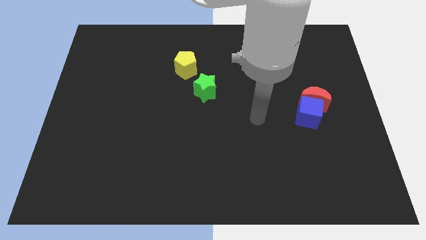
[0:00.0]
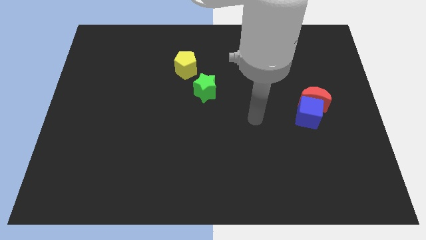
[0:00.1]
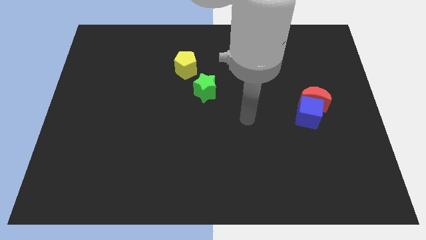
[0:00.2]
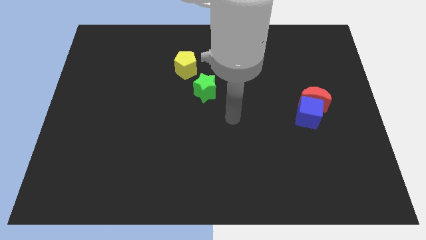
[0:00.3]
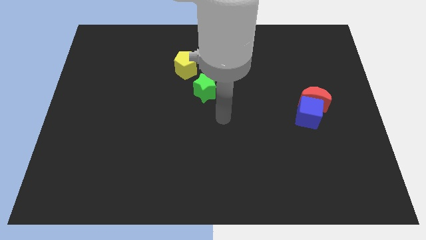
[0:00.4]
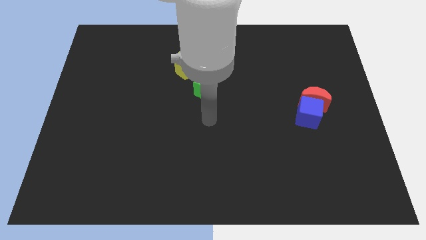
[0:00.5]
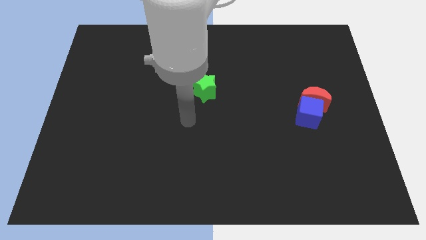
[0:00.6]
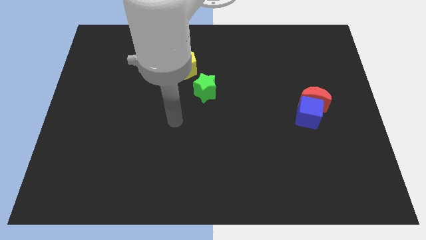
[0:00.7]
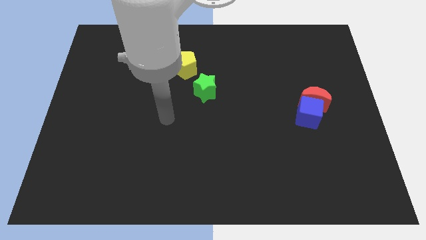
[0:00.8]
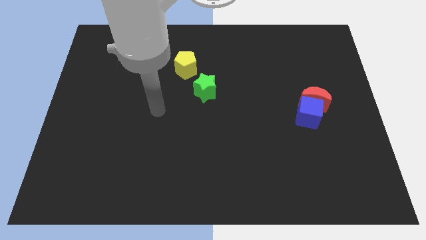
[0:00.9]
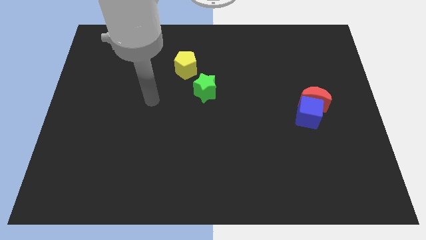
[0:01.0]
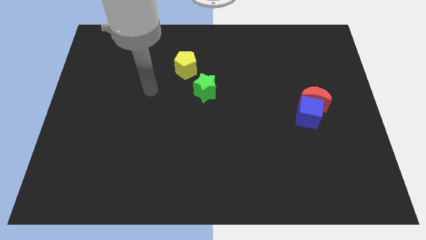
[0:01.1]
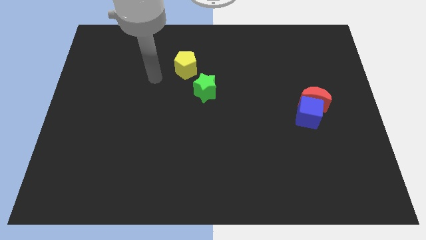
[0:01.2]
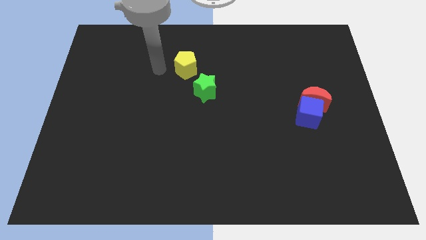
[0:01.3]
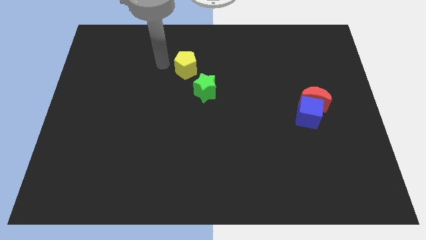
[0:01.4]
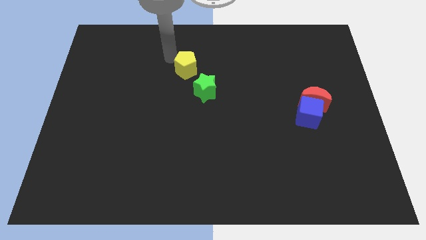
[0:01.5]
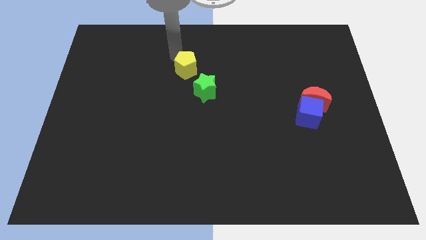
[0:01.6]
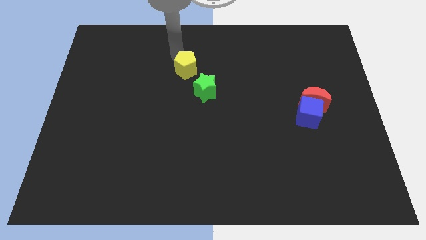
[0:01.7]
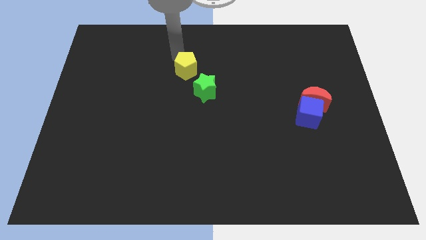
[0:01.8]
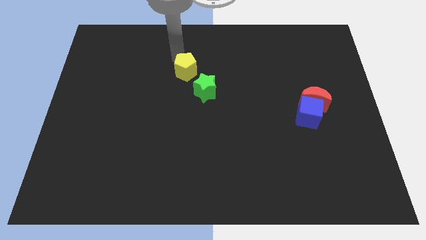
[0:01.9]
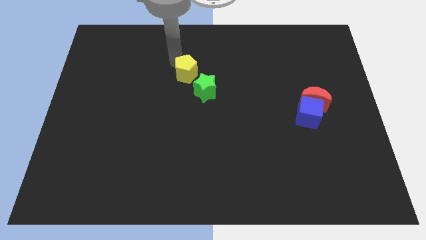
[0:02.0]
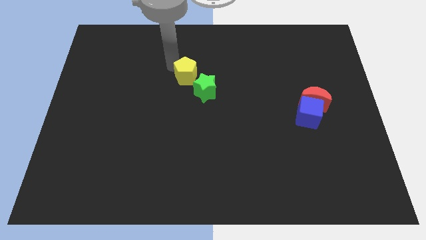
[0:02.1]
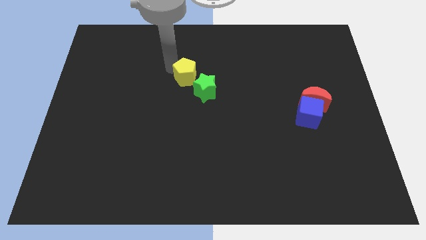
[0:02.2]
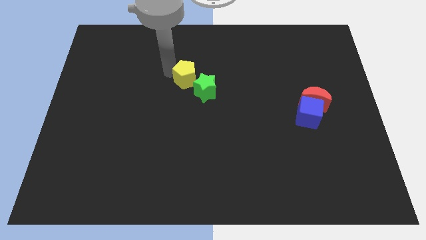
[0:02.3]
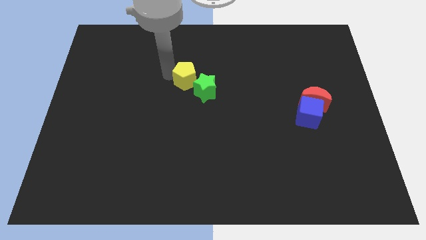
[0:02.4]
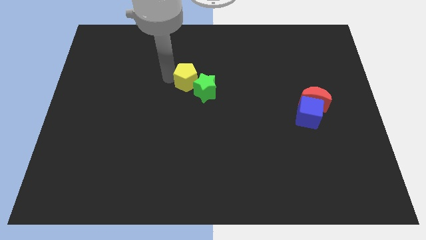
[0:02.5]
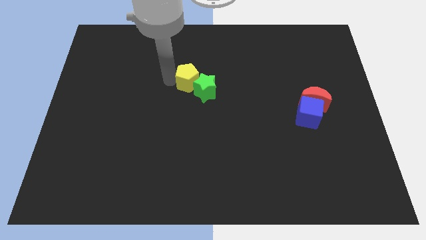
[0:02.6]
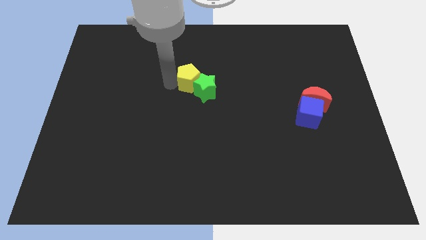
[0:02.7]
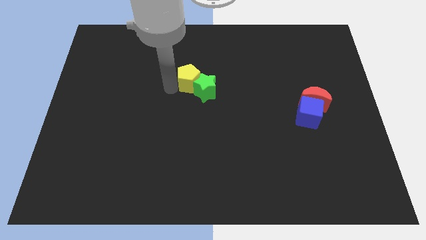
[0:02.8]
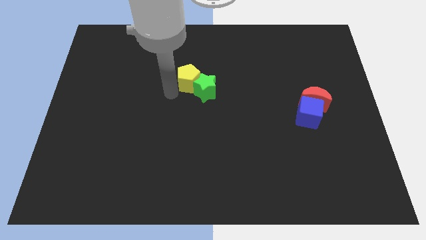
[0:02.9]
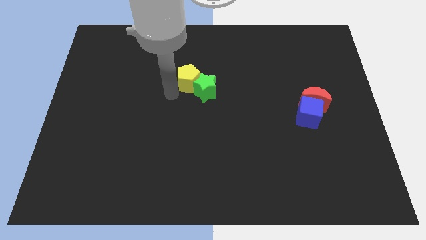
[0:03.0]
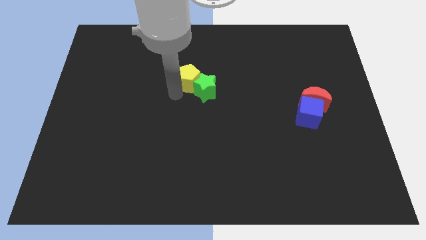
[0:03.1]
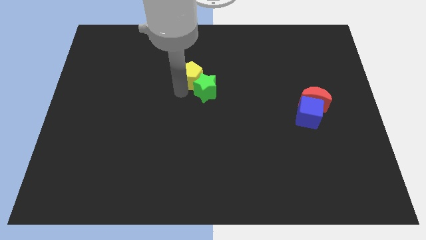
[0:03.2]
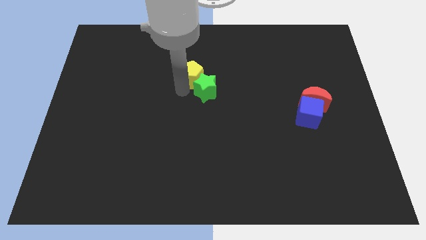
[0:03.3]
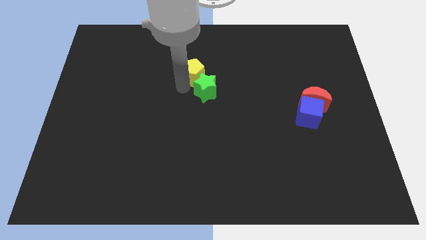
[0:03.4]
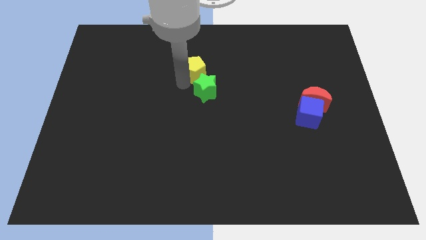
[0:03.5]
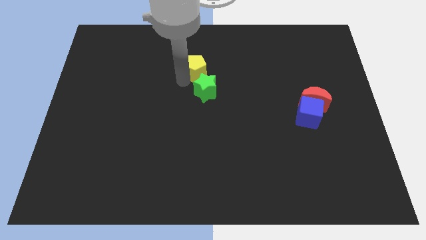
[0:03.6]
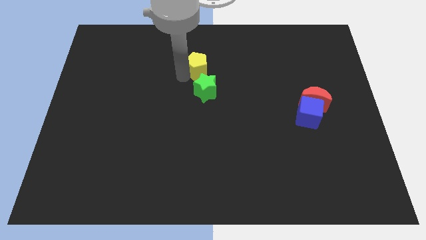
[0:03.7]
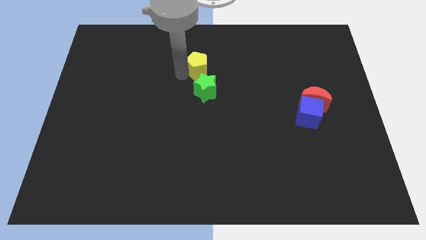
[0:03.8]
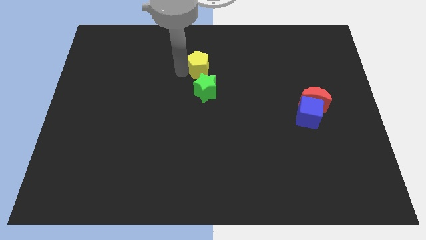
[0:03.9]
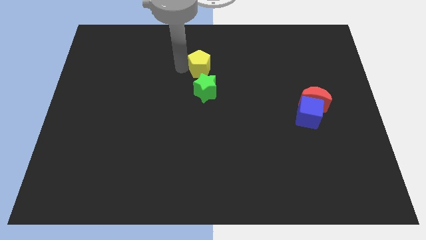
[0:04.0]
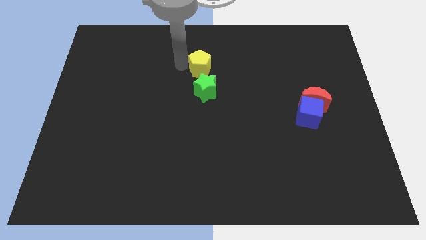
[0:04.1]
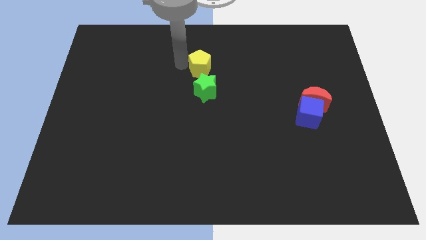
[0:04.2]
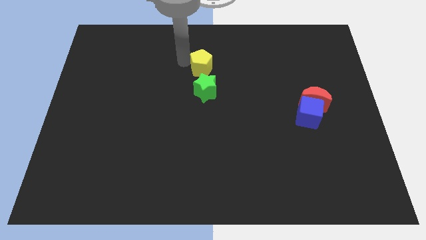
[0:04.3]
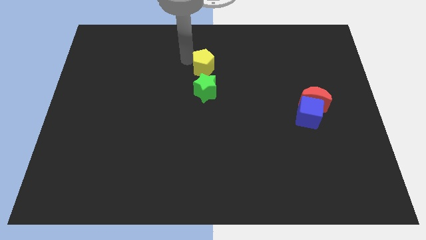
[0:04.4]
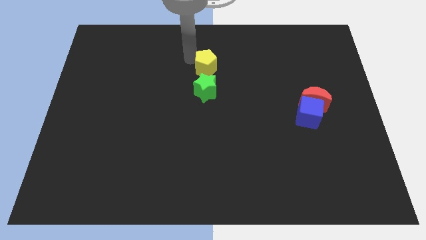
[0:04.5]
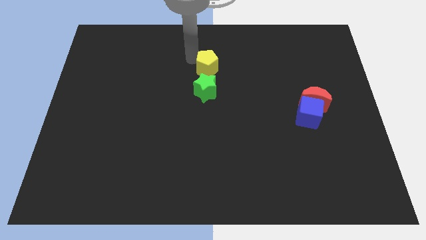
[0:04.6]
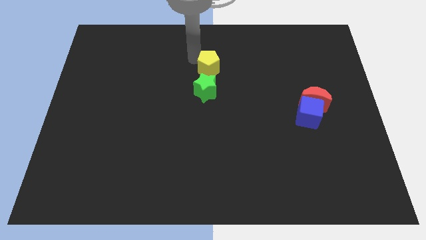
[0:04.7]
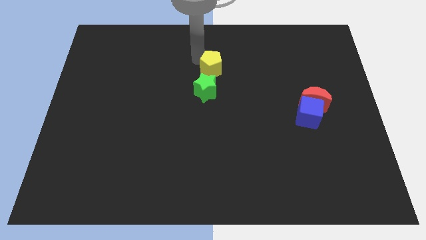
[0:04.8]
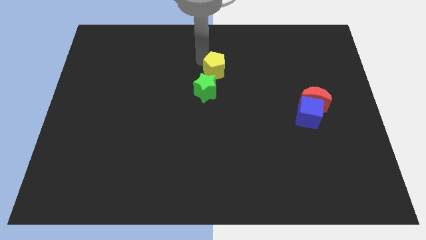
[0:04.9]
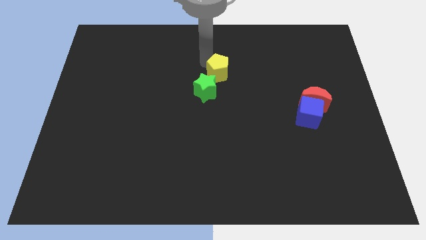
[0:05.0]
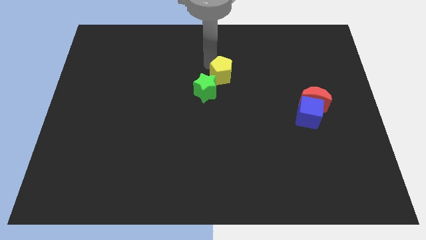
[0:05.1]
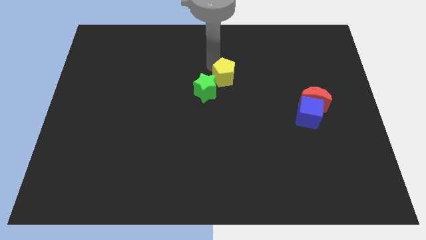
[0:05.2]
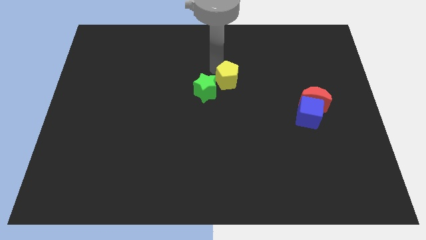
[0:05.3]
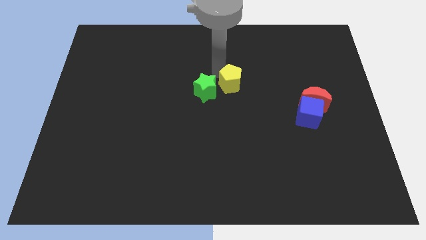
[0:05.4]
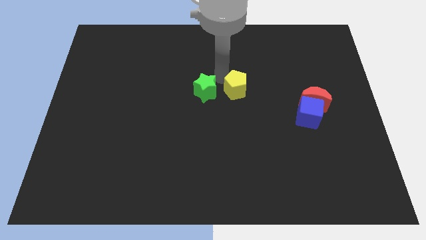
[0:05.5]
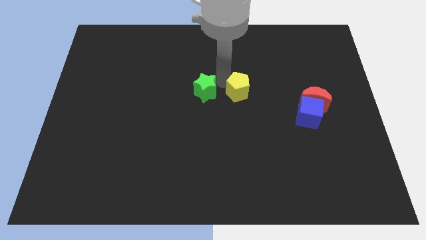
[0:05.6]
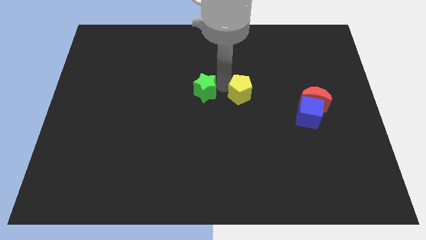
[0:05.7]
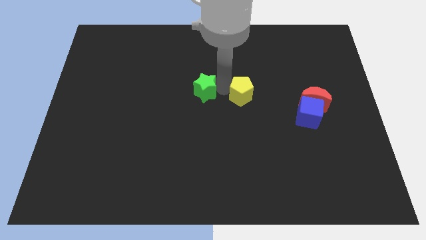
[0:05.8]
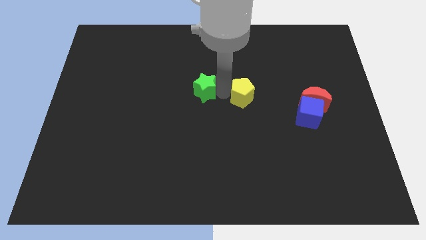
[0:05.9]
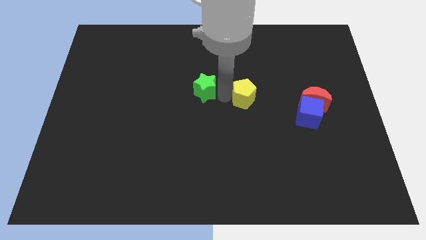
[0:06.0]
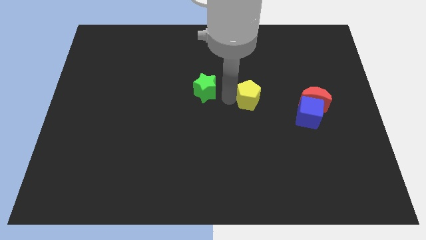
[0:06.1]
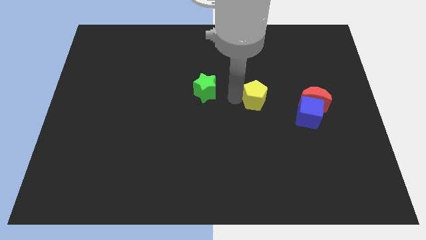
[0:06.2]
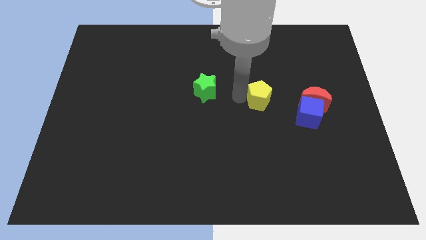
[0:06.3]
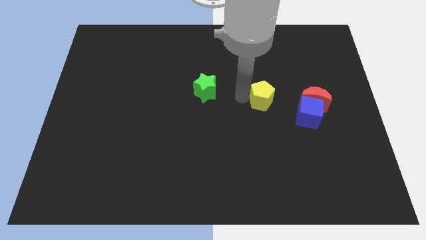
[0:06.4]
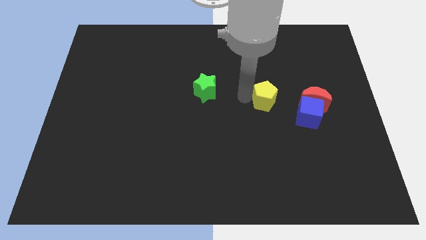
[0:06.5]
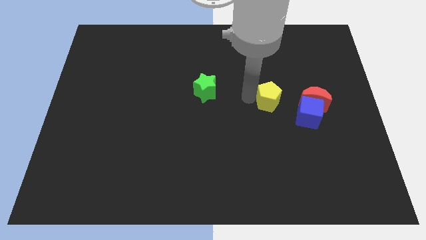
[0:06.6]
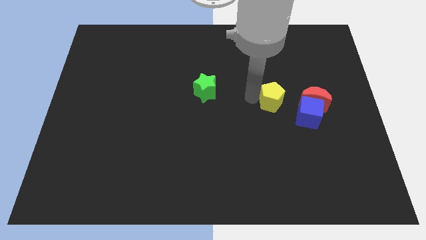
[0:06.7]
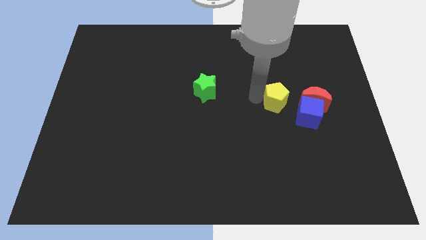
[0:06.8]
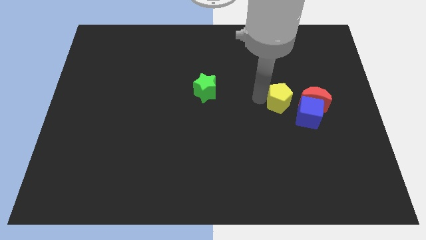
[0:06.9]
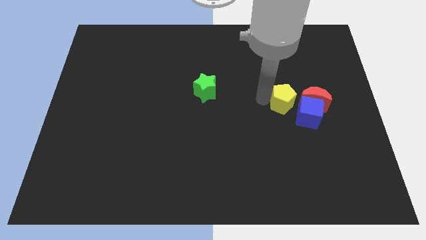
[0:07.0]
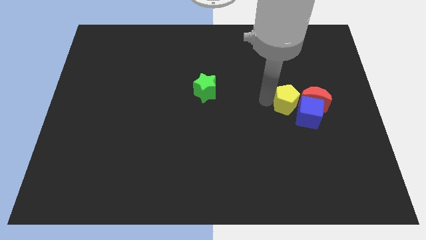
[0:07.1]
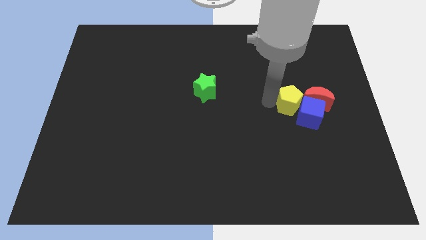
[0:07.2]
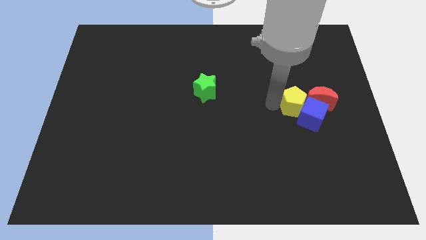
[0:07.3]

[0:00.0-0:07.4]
push the pentagon towards the blue block

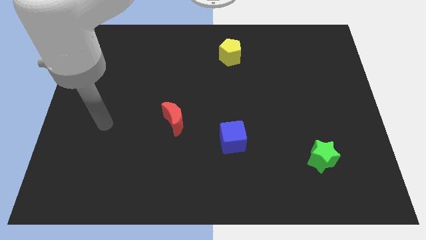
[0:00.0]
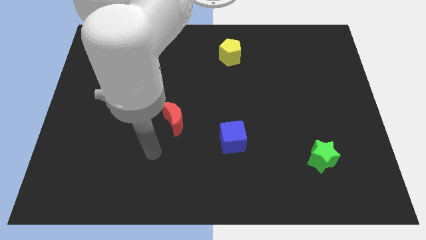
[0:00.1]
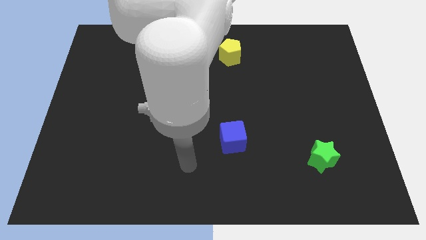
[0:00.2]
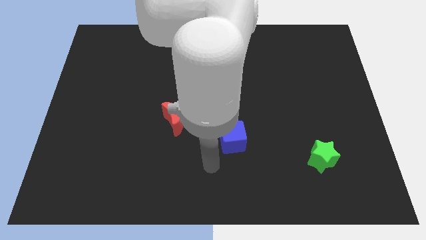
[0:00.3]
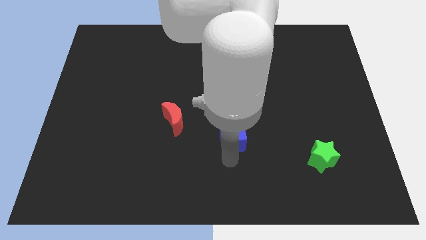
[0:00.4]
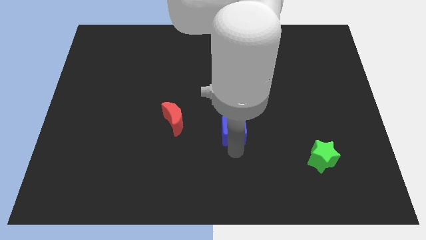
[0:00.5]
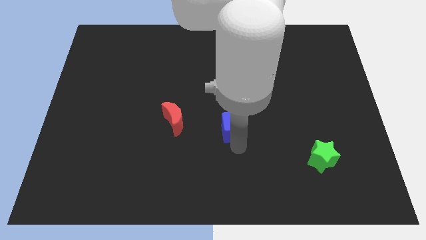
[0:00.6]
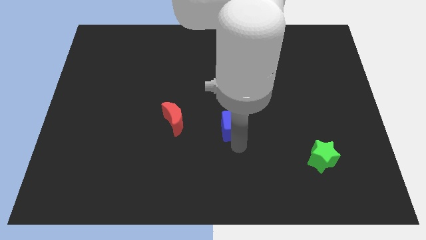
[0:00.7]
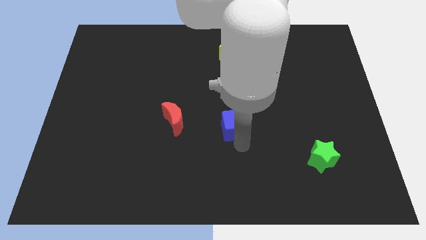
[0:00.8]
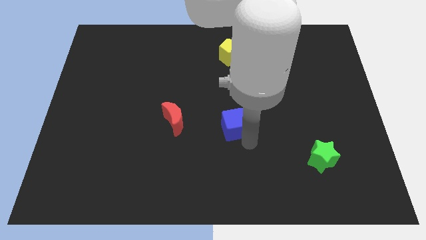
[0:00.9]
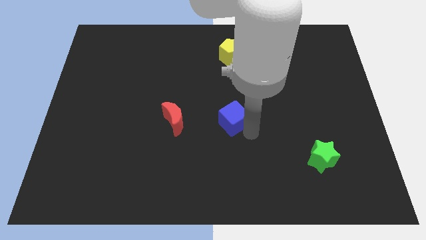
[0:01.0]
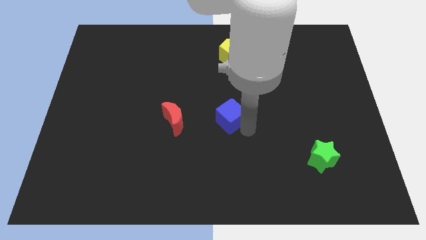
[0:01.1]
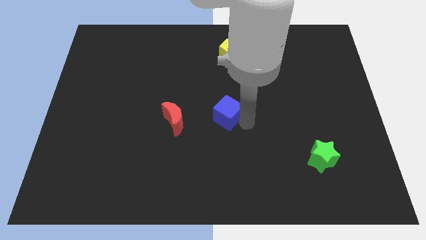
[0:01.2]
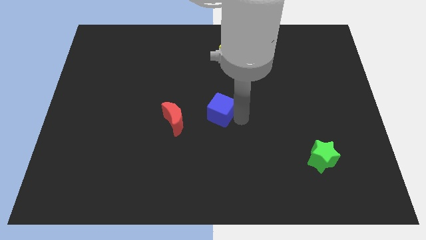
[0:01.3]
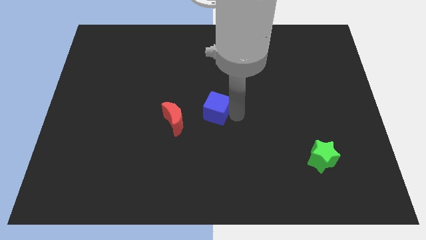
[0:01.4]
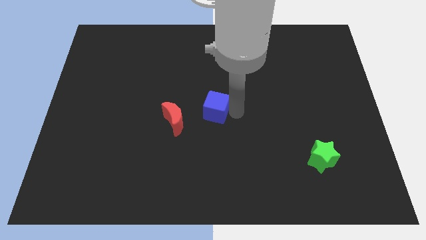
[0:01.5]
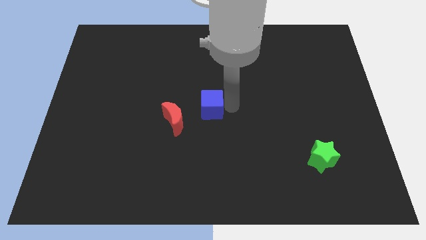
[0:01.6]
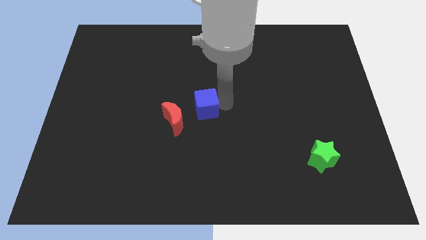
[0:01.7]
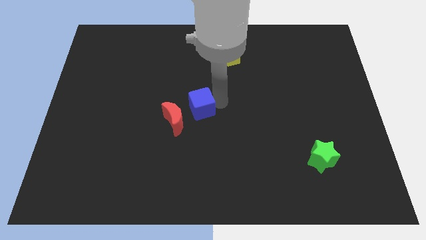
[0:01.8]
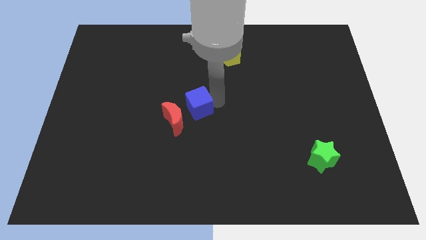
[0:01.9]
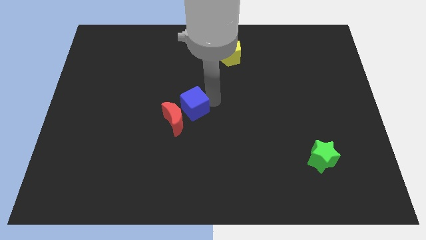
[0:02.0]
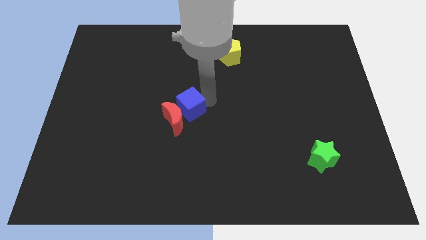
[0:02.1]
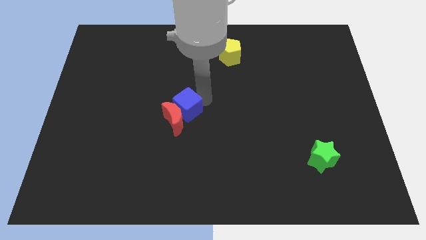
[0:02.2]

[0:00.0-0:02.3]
push the blue cube next to the red moon
